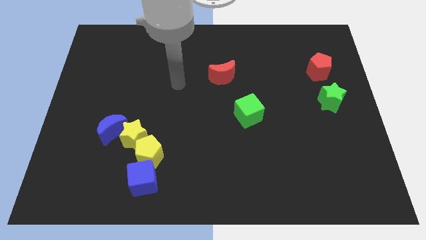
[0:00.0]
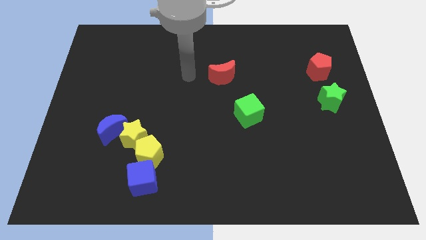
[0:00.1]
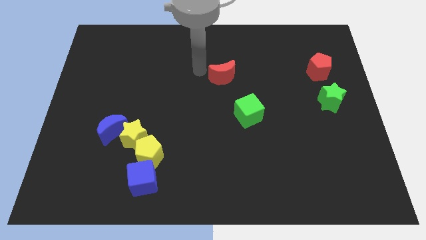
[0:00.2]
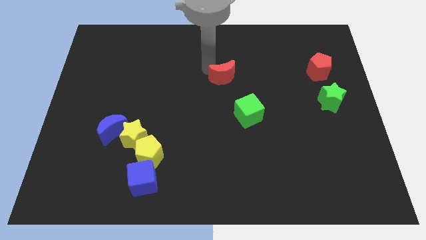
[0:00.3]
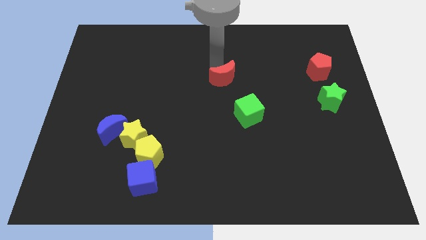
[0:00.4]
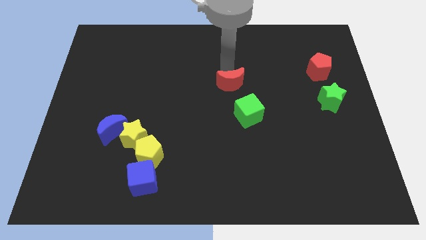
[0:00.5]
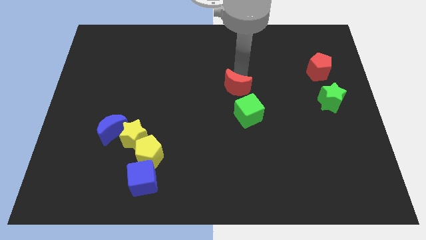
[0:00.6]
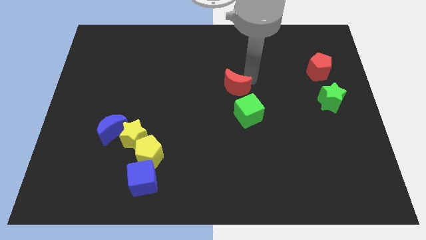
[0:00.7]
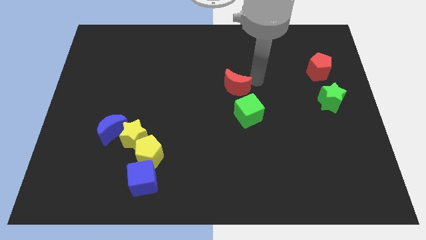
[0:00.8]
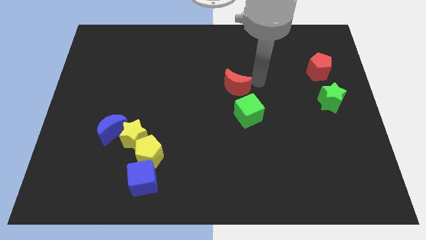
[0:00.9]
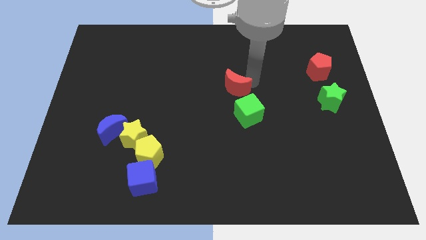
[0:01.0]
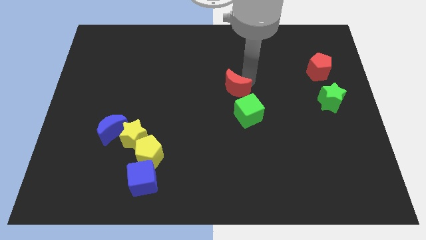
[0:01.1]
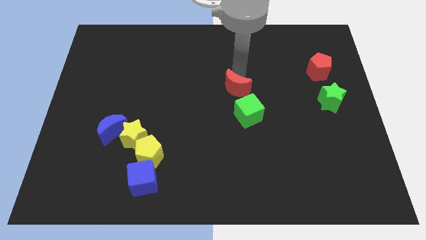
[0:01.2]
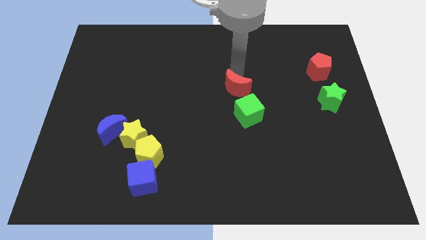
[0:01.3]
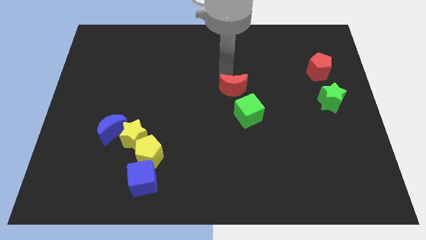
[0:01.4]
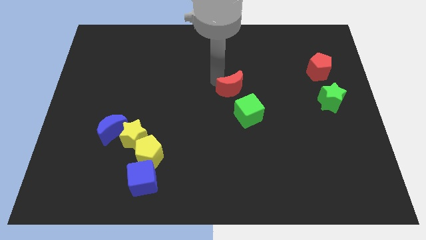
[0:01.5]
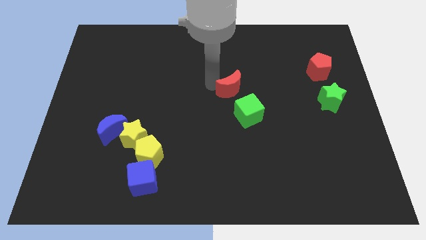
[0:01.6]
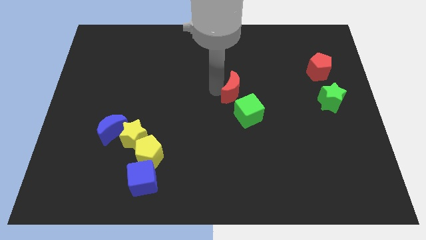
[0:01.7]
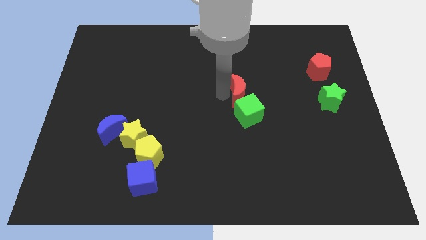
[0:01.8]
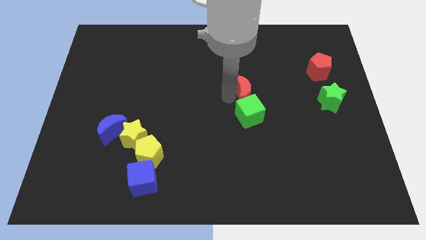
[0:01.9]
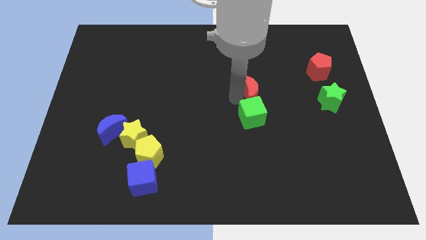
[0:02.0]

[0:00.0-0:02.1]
side the red moon into the green cube

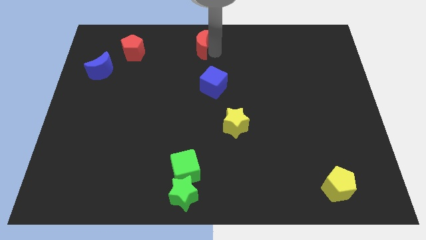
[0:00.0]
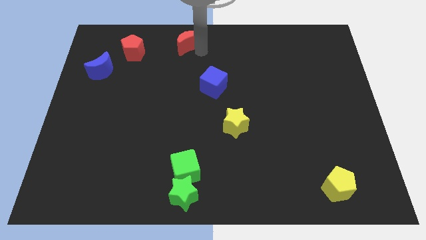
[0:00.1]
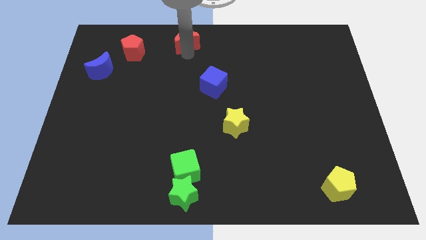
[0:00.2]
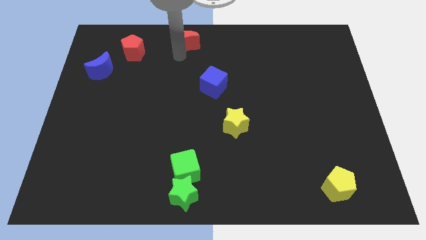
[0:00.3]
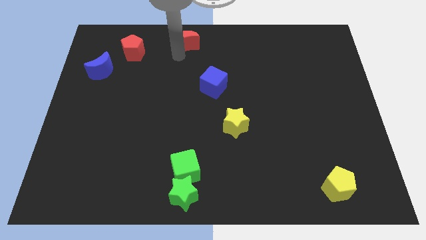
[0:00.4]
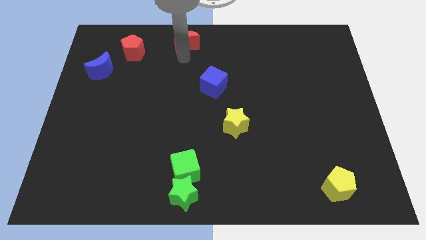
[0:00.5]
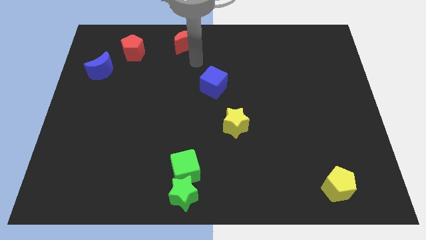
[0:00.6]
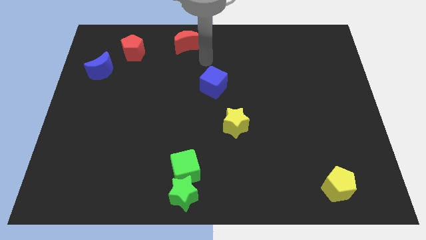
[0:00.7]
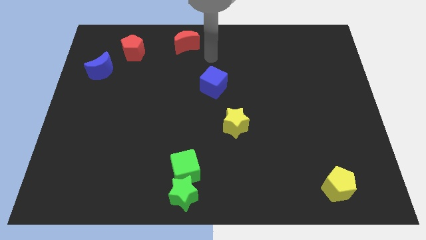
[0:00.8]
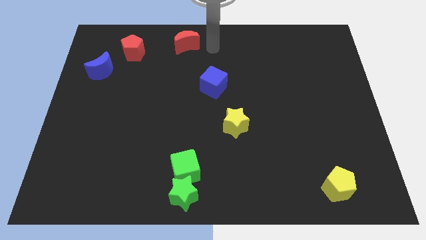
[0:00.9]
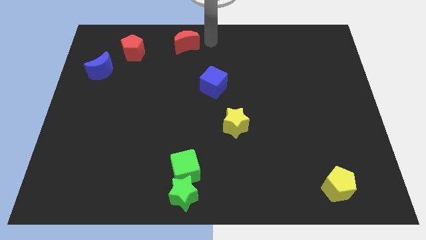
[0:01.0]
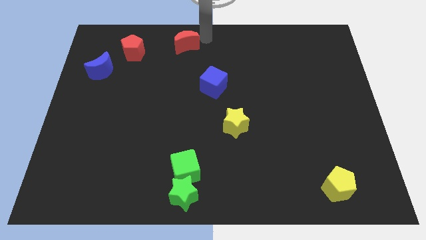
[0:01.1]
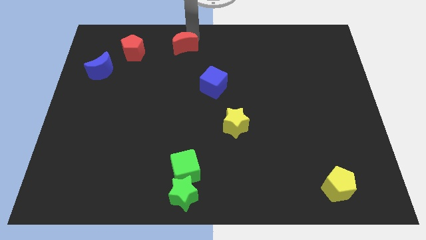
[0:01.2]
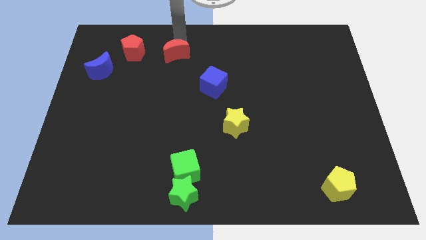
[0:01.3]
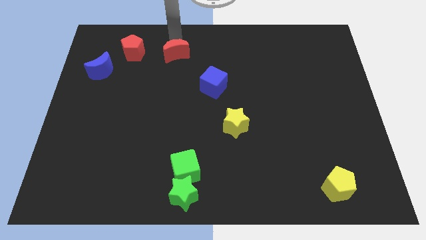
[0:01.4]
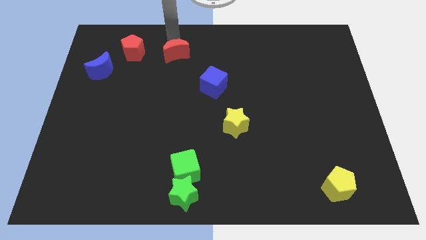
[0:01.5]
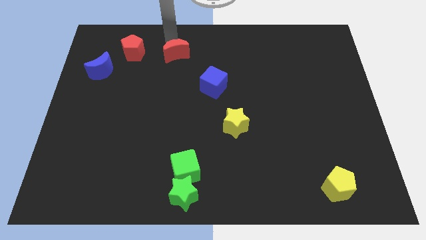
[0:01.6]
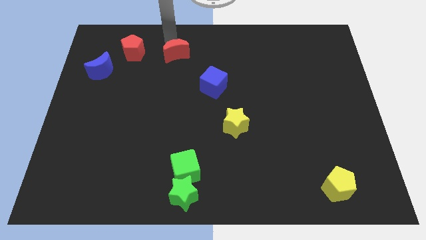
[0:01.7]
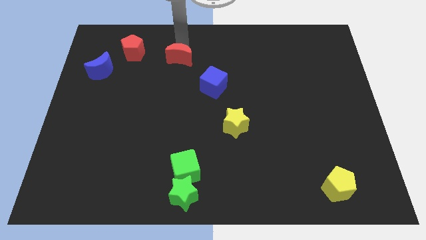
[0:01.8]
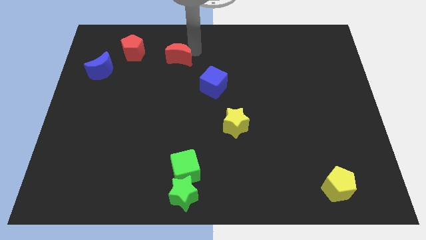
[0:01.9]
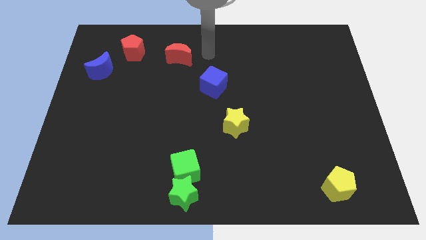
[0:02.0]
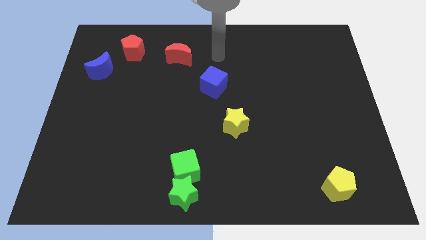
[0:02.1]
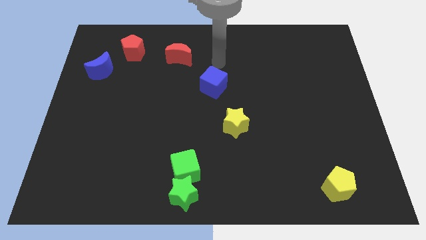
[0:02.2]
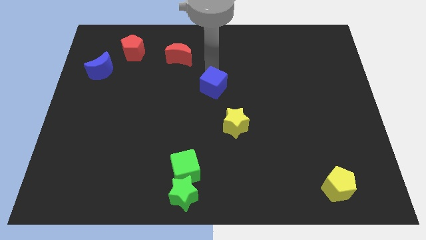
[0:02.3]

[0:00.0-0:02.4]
place the red moon in between the red pentagon and blue cube

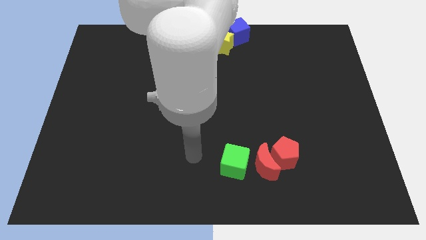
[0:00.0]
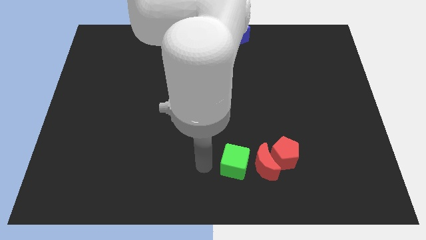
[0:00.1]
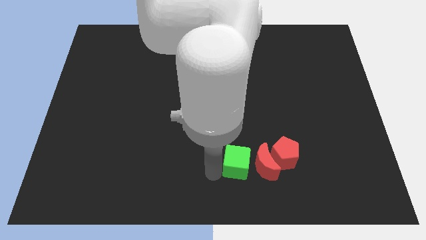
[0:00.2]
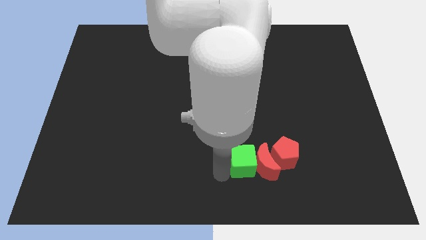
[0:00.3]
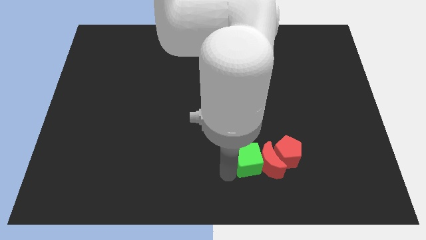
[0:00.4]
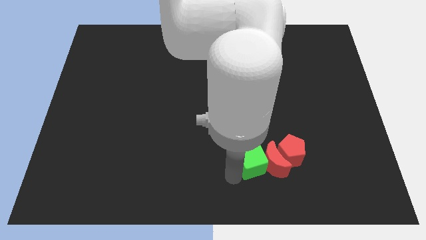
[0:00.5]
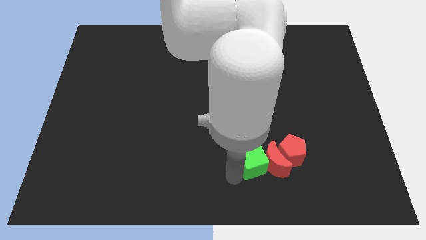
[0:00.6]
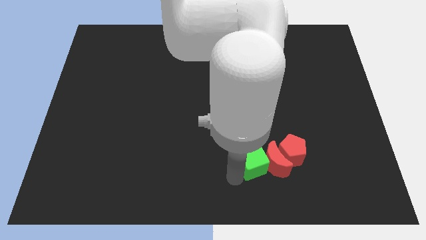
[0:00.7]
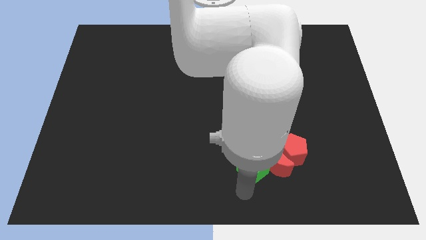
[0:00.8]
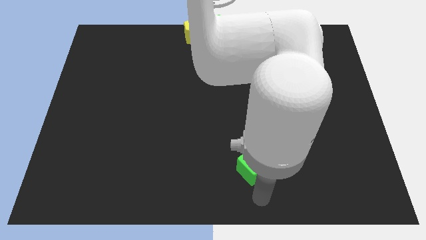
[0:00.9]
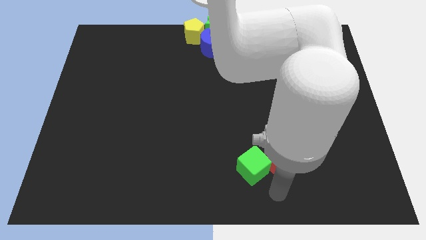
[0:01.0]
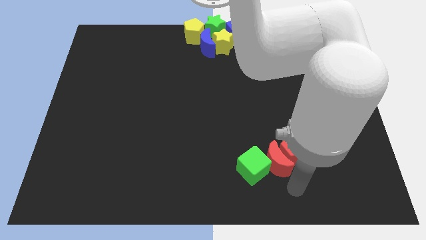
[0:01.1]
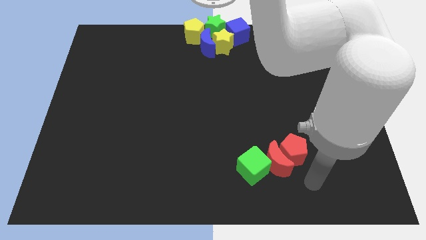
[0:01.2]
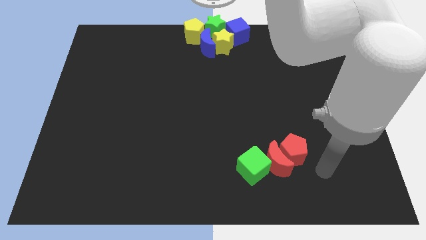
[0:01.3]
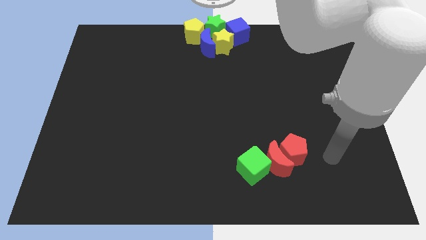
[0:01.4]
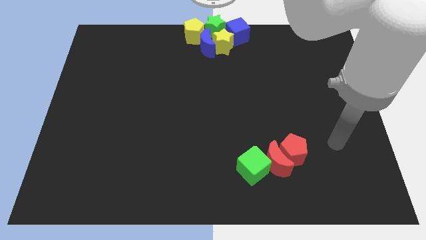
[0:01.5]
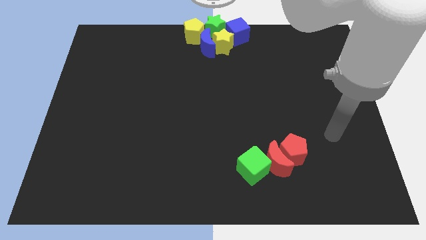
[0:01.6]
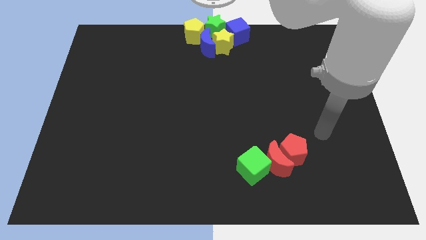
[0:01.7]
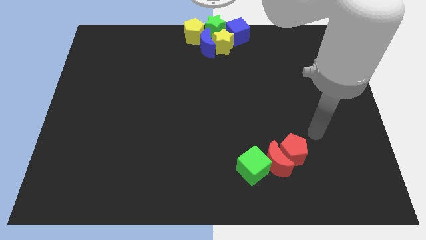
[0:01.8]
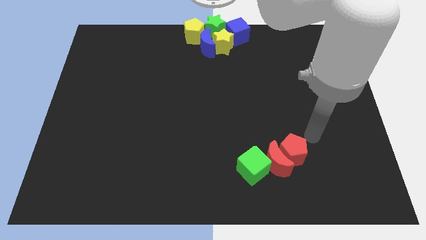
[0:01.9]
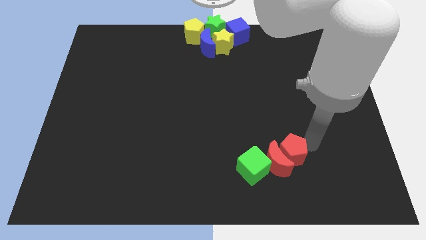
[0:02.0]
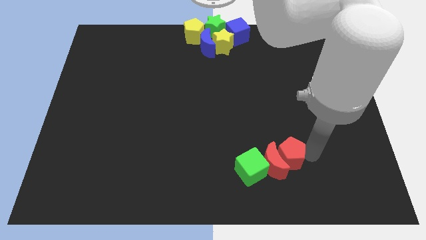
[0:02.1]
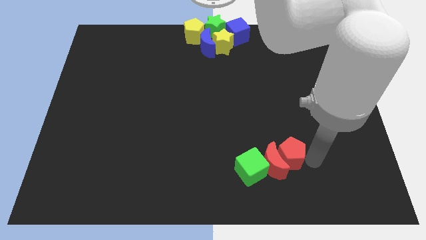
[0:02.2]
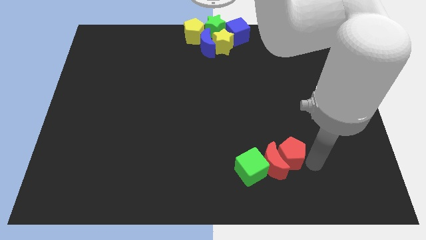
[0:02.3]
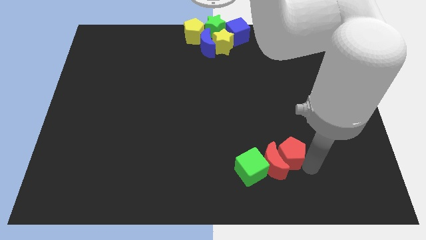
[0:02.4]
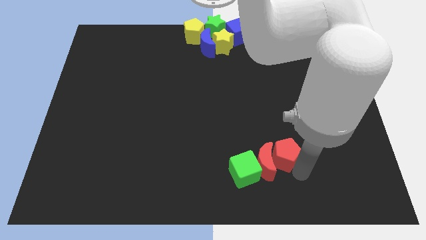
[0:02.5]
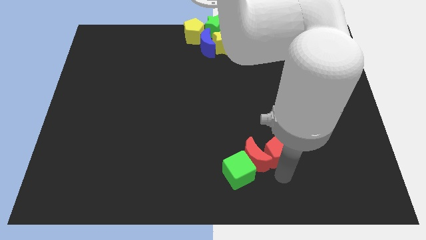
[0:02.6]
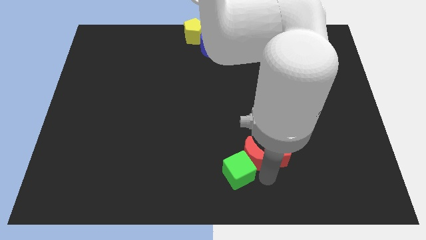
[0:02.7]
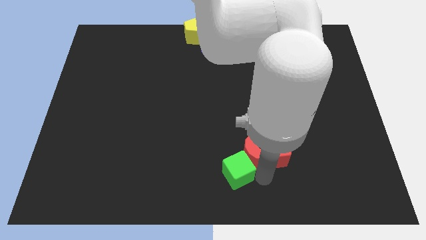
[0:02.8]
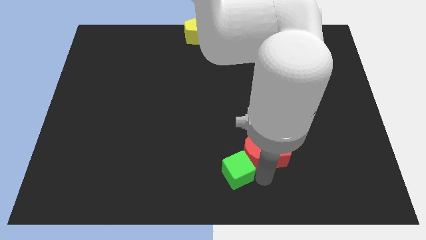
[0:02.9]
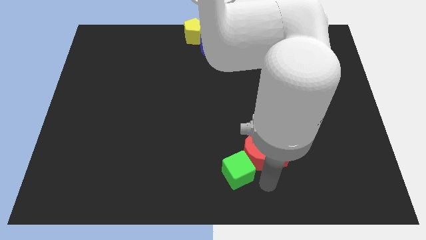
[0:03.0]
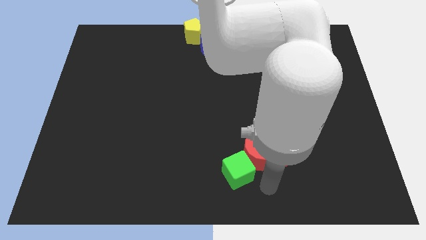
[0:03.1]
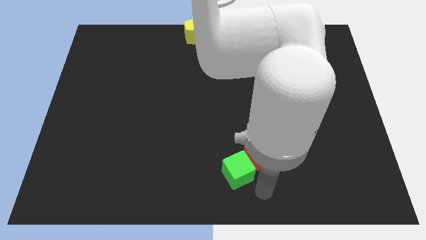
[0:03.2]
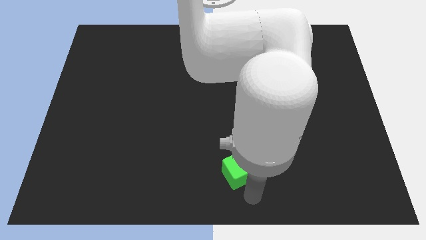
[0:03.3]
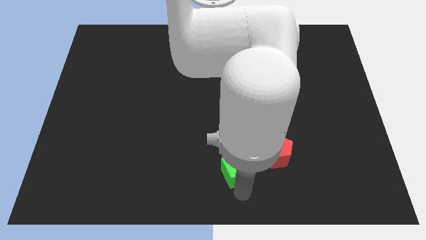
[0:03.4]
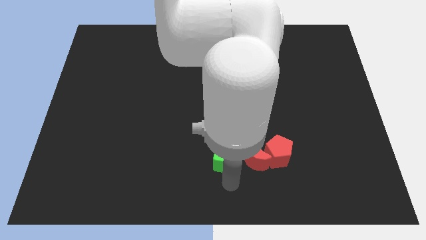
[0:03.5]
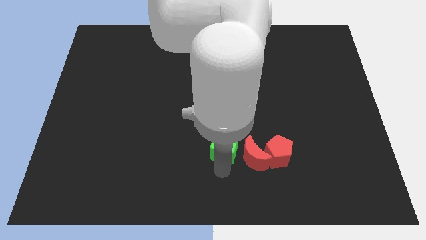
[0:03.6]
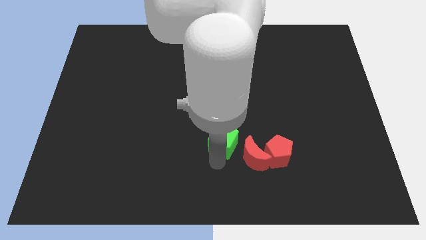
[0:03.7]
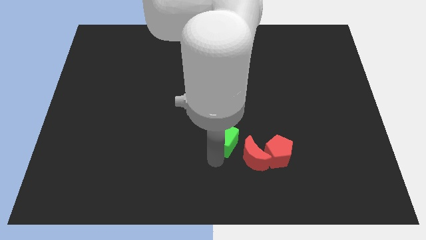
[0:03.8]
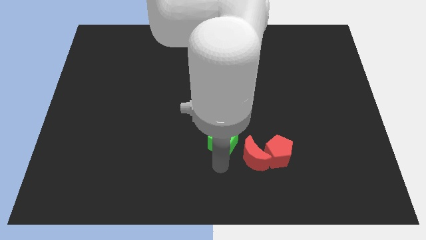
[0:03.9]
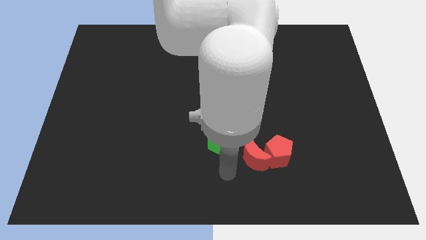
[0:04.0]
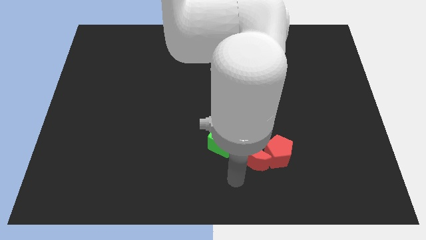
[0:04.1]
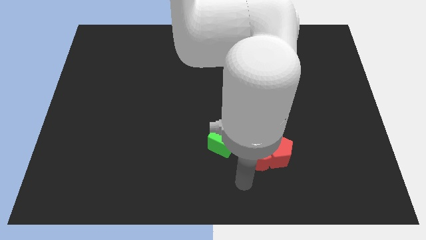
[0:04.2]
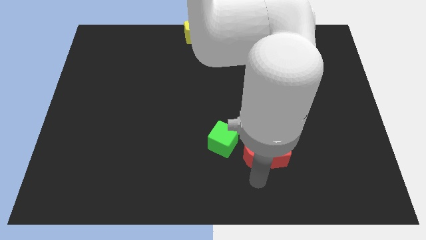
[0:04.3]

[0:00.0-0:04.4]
move the green cube up slightly
